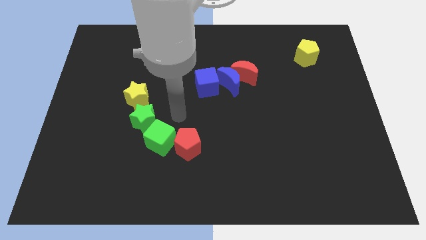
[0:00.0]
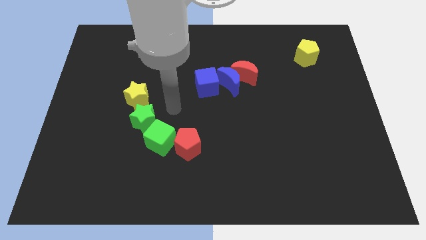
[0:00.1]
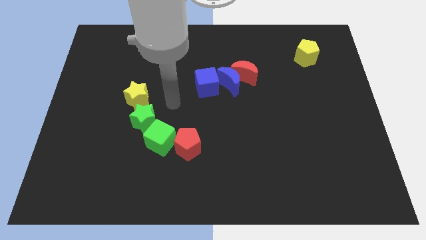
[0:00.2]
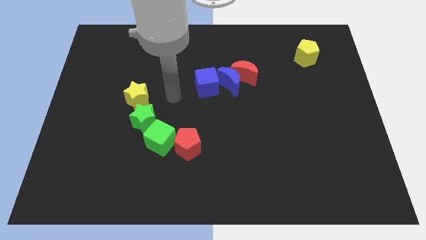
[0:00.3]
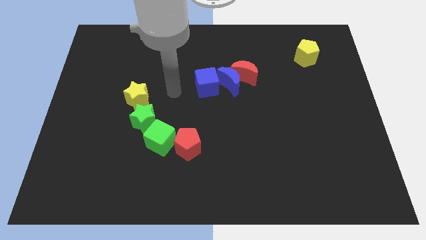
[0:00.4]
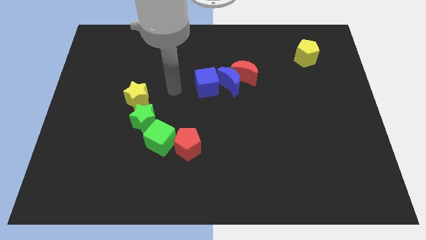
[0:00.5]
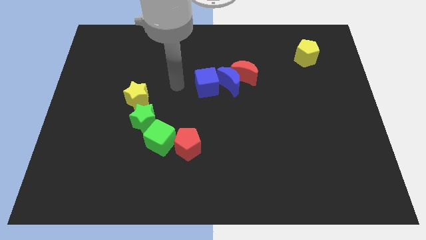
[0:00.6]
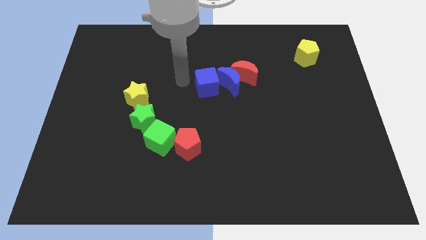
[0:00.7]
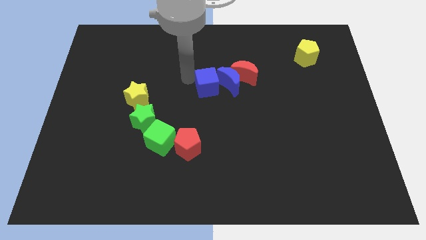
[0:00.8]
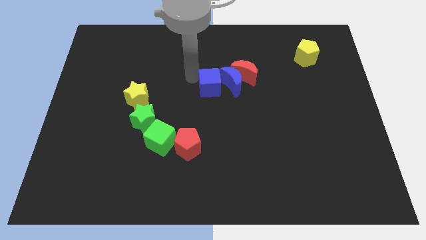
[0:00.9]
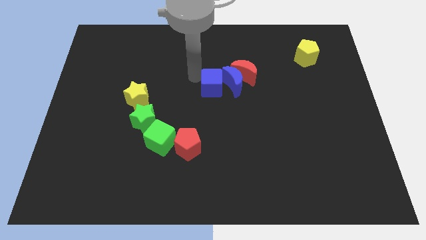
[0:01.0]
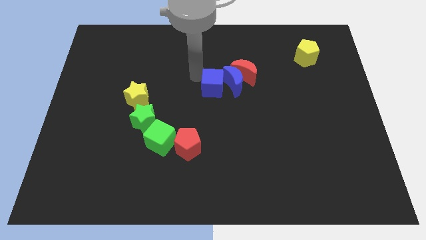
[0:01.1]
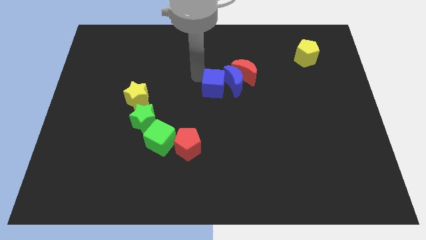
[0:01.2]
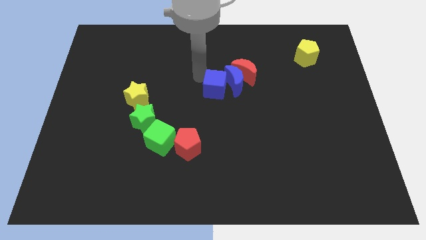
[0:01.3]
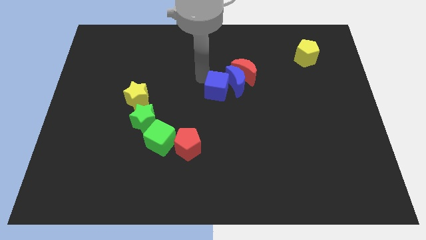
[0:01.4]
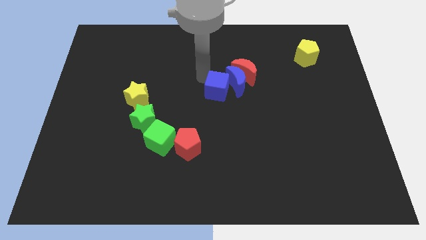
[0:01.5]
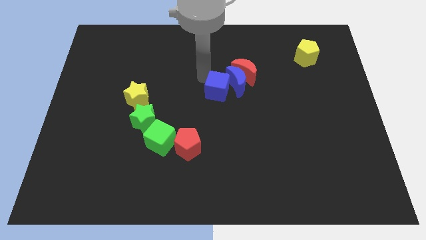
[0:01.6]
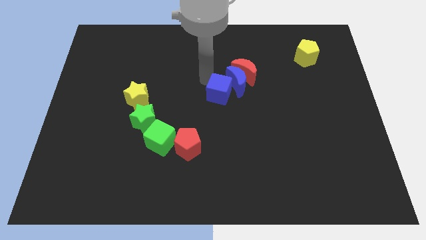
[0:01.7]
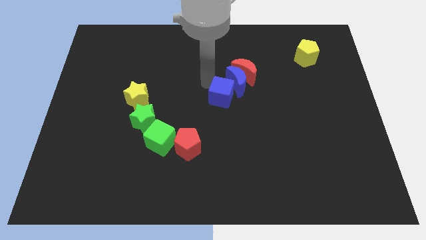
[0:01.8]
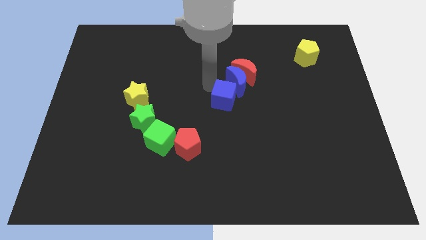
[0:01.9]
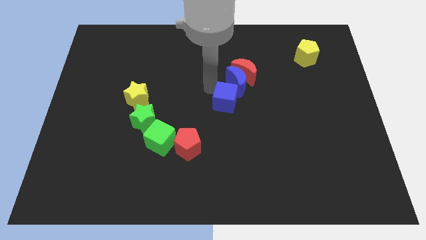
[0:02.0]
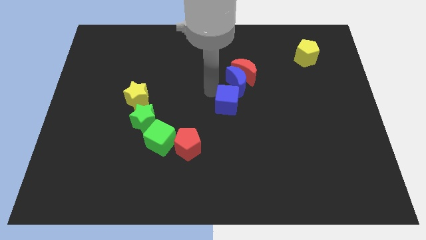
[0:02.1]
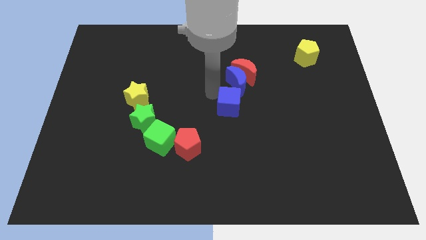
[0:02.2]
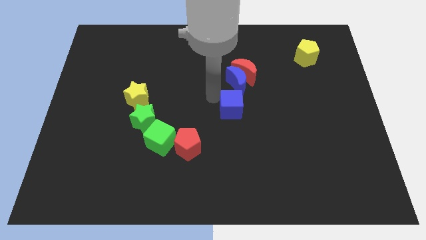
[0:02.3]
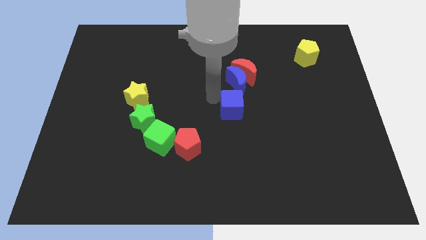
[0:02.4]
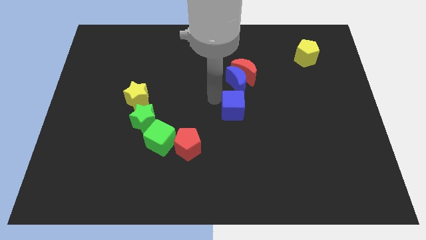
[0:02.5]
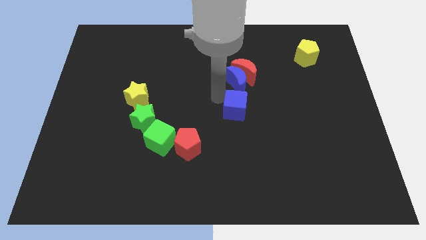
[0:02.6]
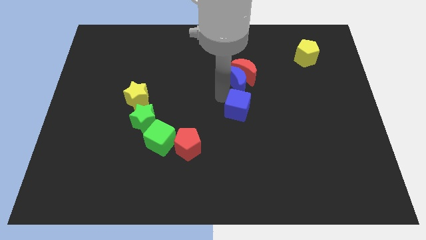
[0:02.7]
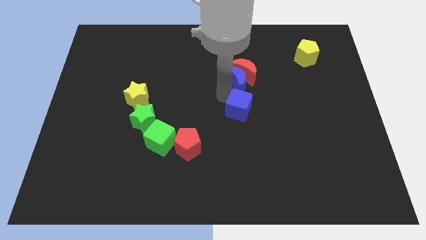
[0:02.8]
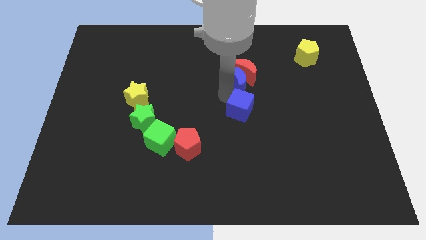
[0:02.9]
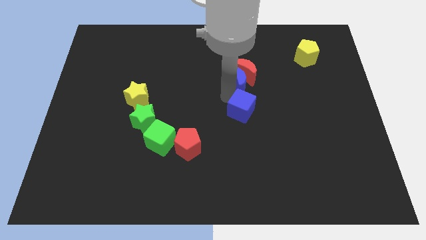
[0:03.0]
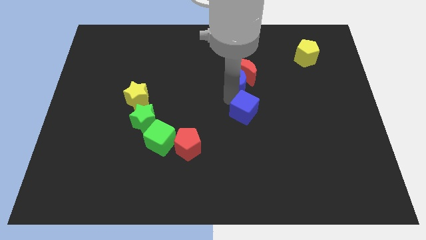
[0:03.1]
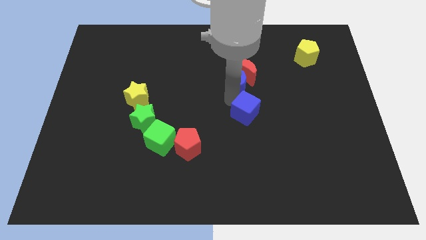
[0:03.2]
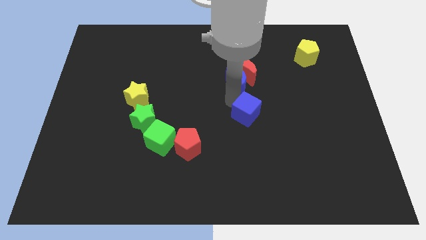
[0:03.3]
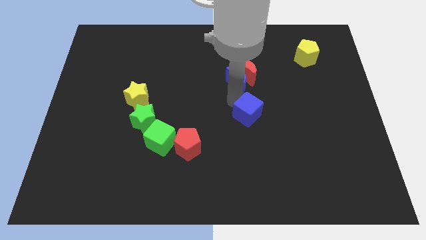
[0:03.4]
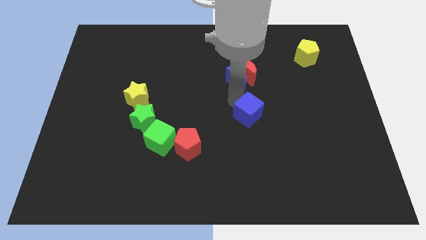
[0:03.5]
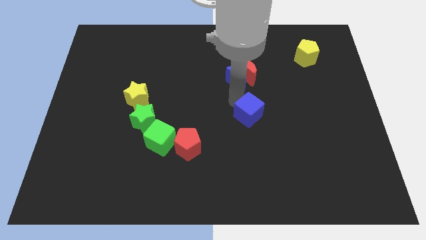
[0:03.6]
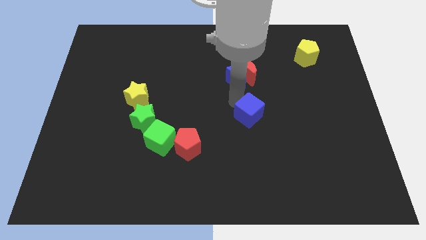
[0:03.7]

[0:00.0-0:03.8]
push the blue cube towards the center of the board

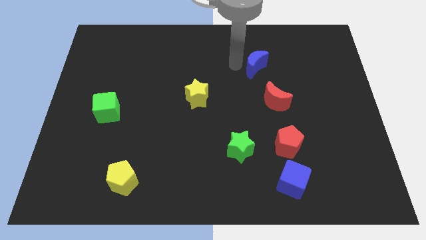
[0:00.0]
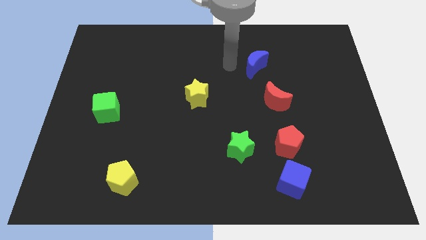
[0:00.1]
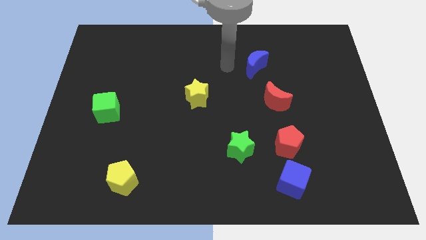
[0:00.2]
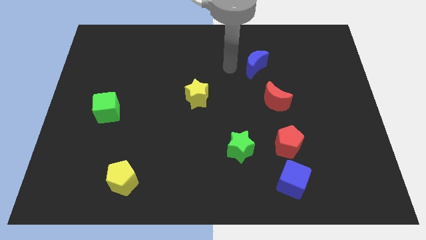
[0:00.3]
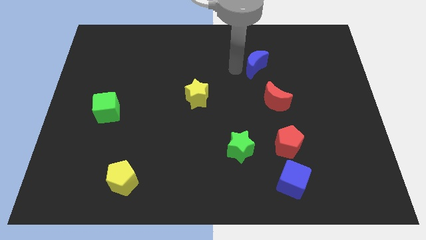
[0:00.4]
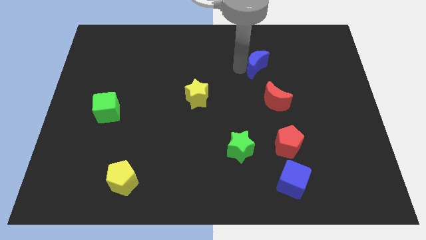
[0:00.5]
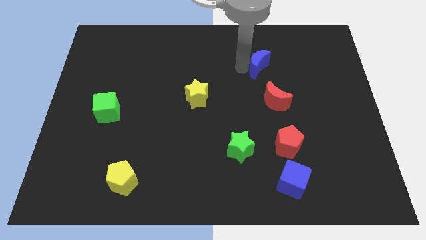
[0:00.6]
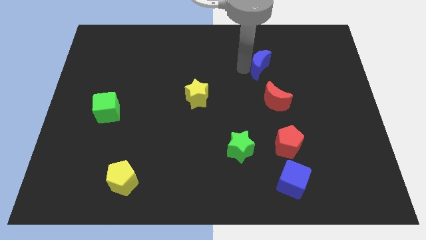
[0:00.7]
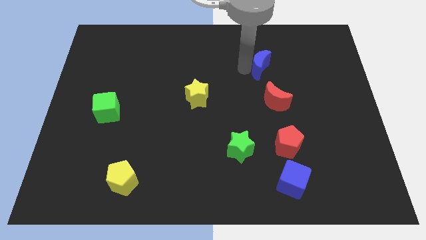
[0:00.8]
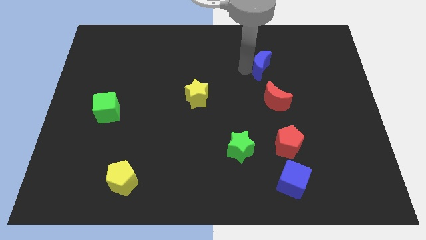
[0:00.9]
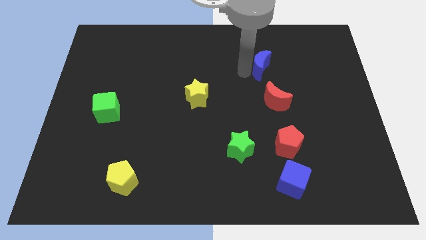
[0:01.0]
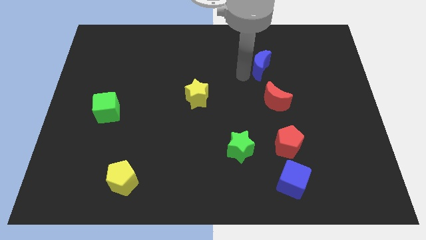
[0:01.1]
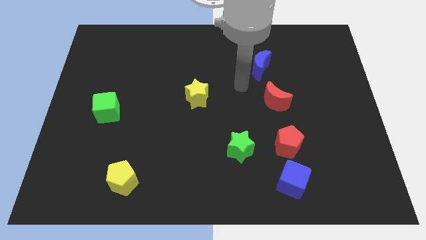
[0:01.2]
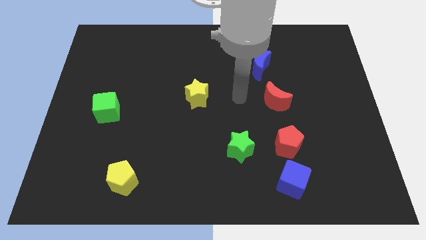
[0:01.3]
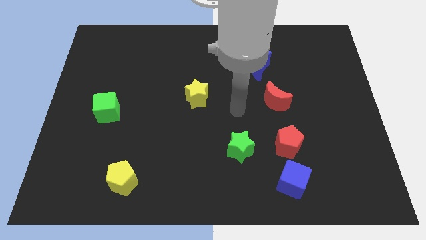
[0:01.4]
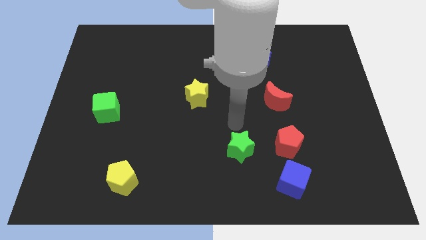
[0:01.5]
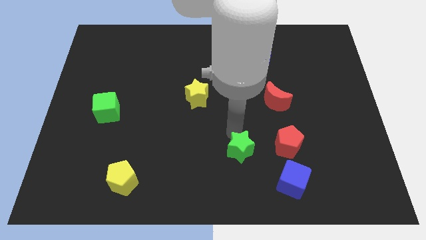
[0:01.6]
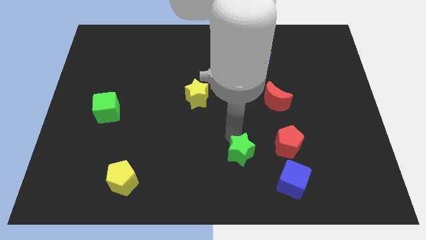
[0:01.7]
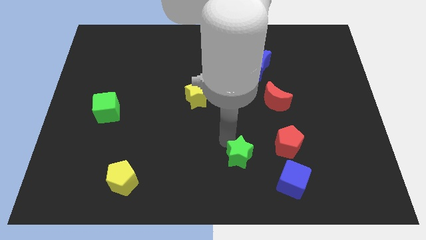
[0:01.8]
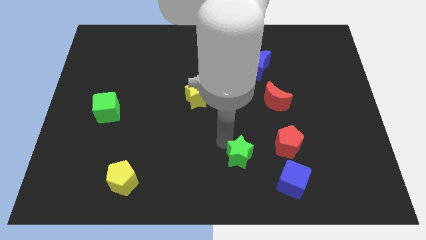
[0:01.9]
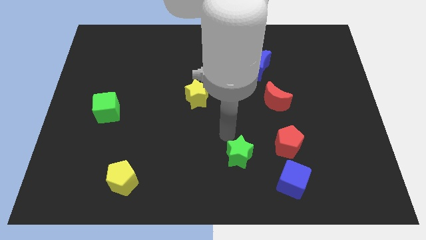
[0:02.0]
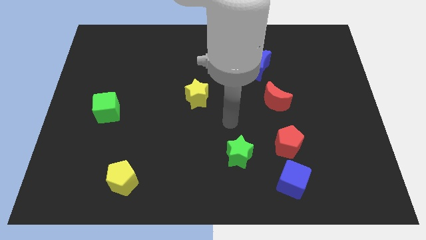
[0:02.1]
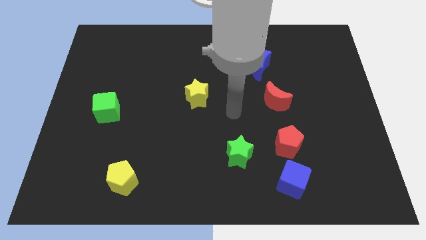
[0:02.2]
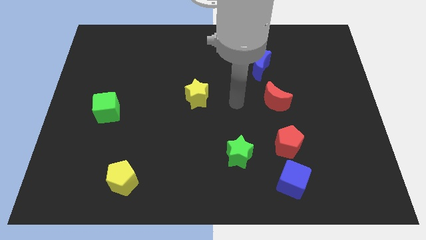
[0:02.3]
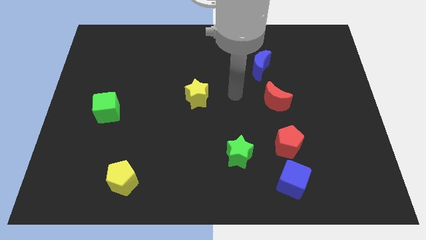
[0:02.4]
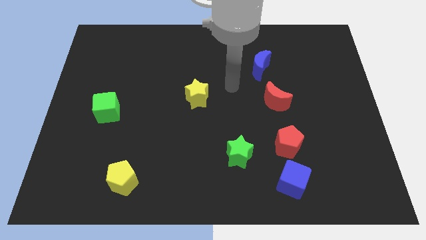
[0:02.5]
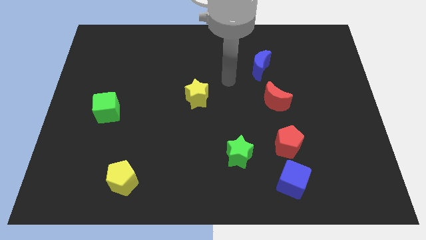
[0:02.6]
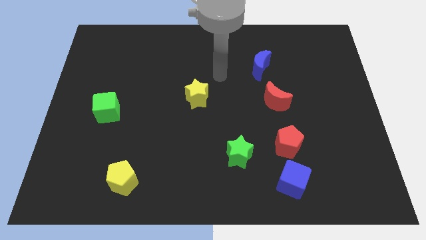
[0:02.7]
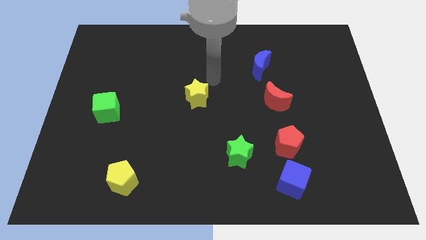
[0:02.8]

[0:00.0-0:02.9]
point your arm on the top right of the yellow star

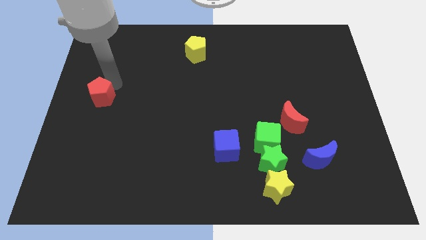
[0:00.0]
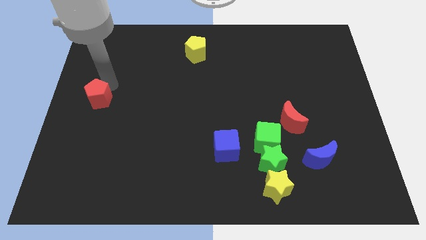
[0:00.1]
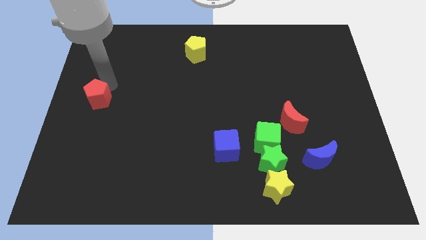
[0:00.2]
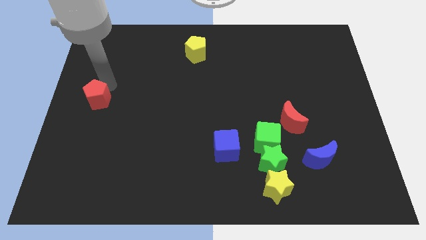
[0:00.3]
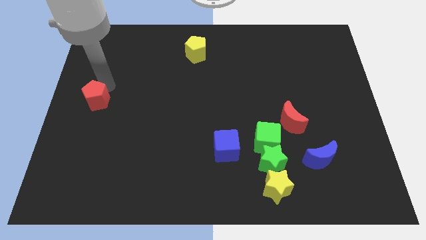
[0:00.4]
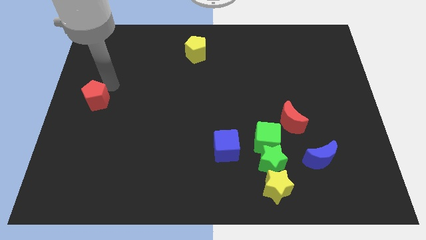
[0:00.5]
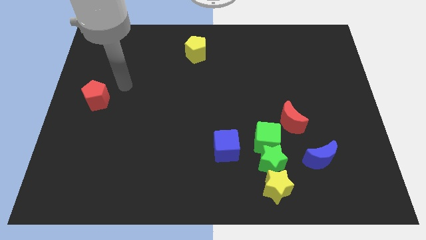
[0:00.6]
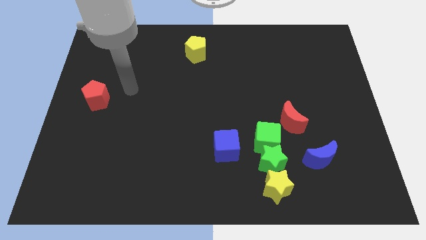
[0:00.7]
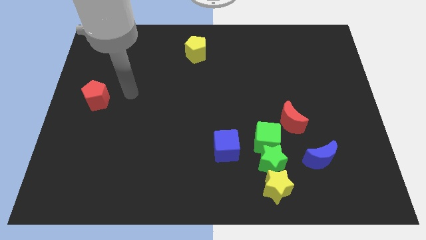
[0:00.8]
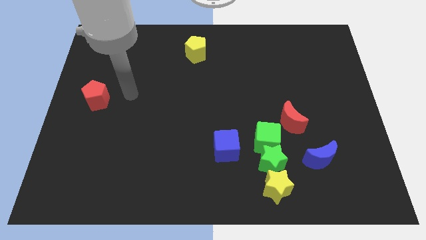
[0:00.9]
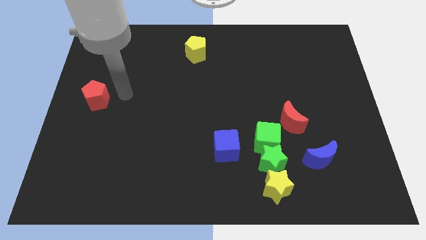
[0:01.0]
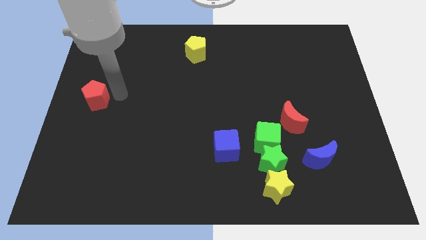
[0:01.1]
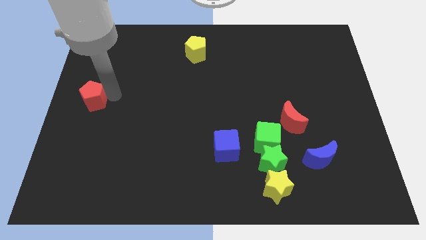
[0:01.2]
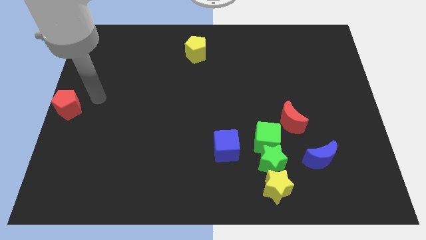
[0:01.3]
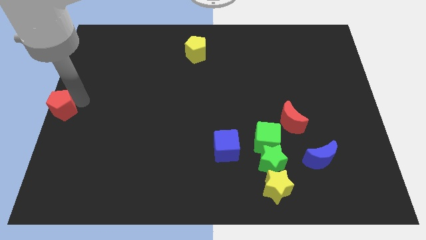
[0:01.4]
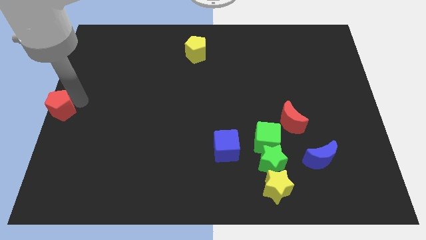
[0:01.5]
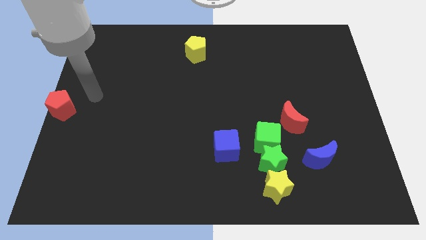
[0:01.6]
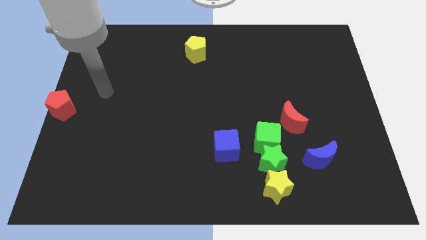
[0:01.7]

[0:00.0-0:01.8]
slightly move the red pentagon to the center left

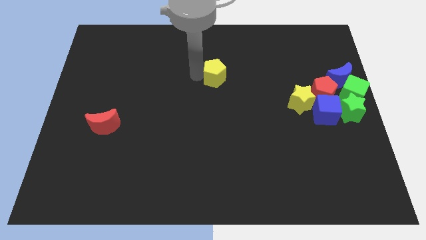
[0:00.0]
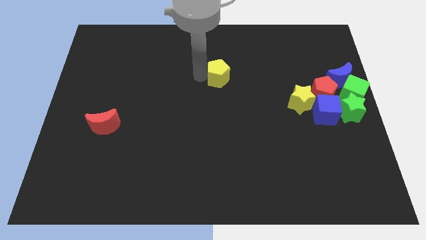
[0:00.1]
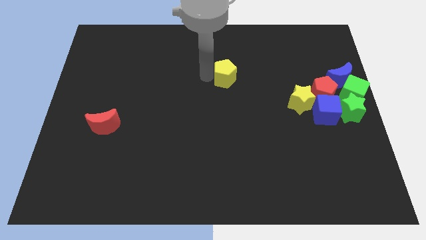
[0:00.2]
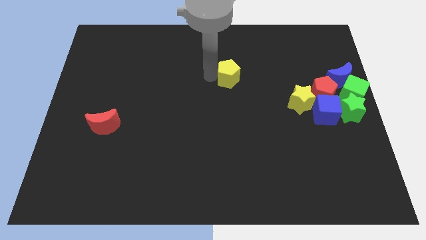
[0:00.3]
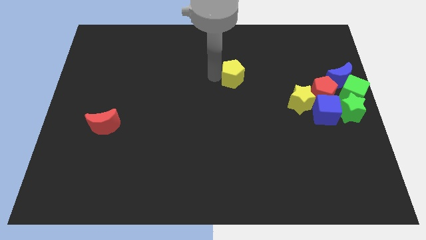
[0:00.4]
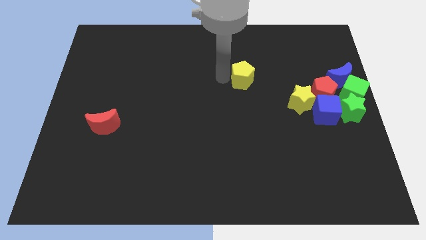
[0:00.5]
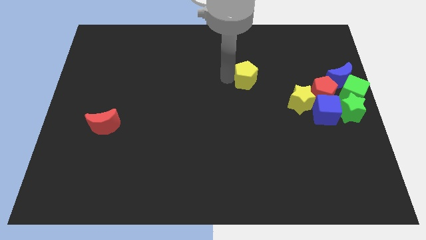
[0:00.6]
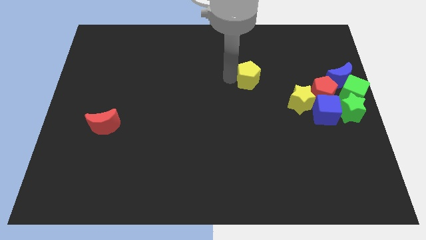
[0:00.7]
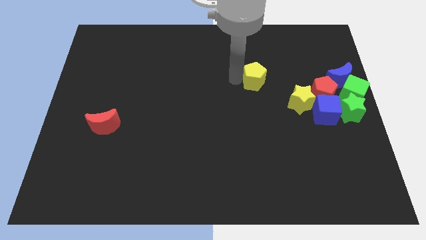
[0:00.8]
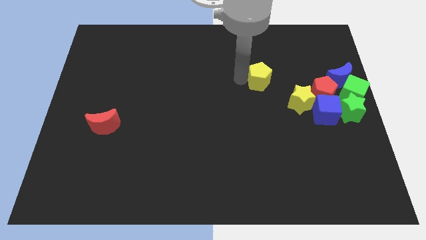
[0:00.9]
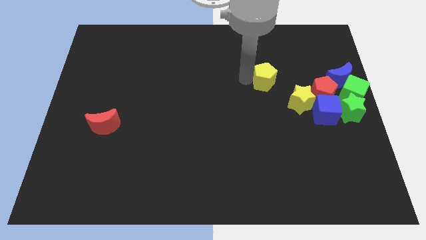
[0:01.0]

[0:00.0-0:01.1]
move the yellow pentagon to the right of the board
